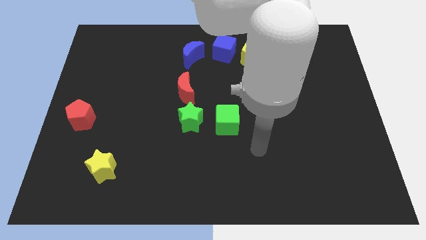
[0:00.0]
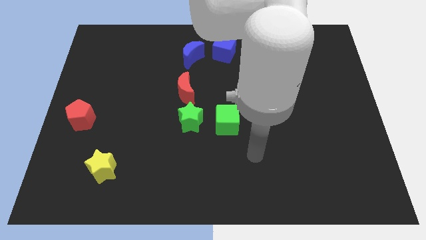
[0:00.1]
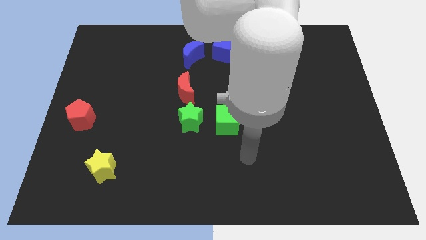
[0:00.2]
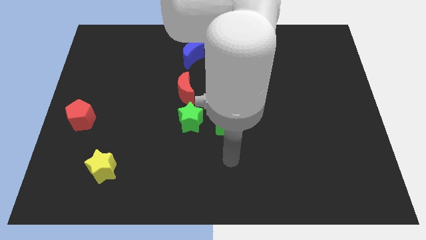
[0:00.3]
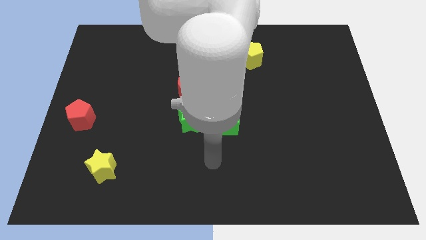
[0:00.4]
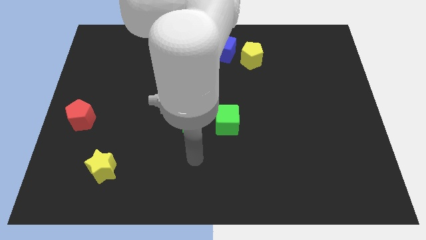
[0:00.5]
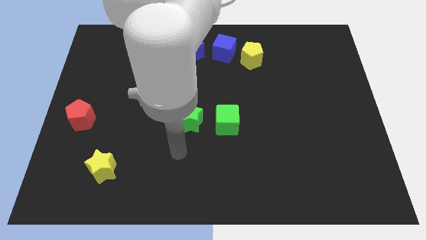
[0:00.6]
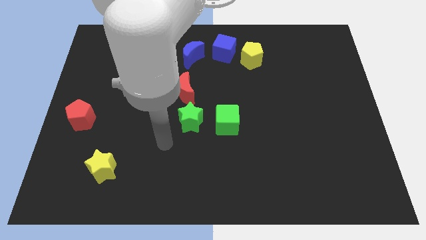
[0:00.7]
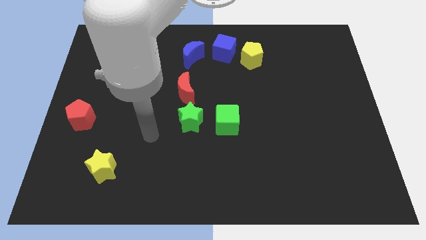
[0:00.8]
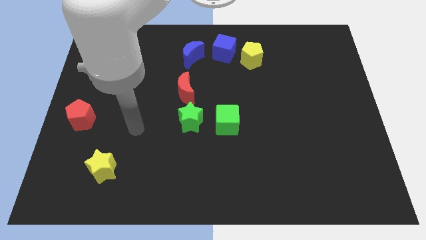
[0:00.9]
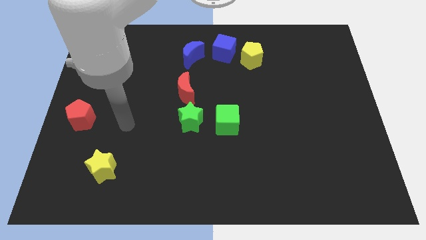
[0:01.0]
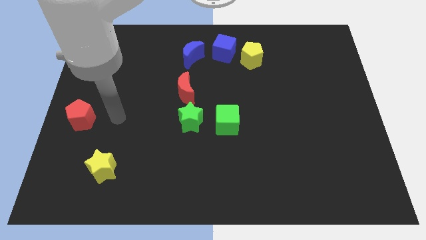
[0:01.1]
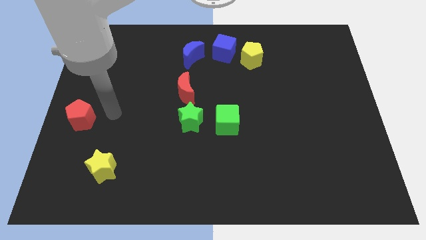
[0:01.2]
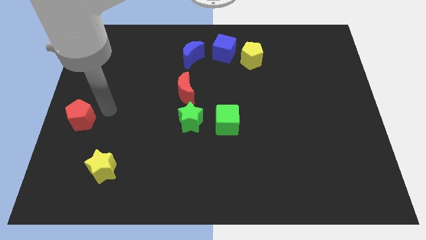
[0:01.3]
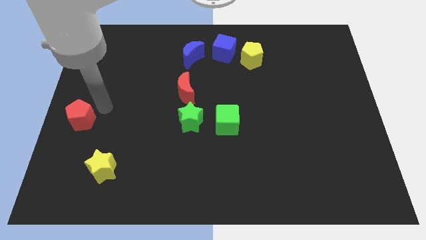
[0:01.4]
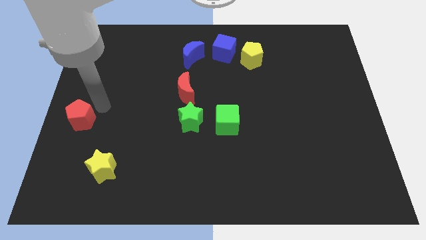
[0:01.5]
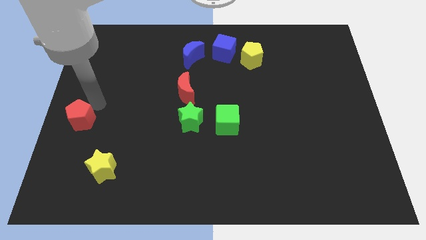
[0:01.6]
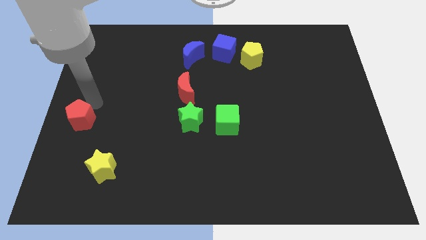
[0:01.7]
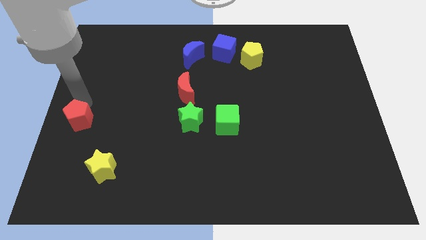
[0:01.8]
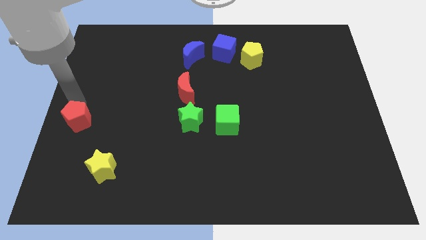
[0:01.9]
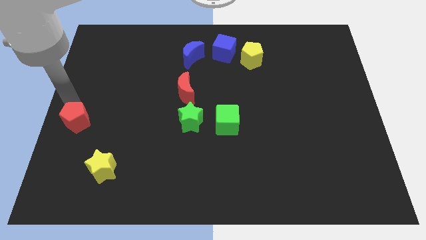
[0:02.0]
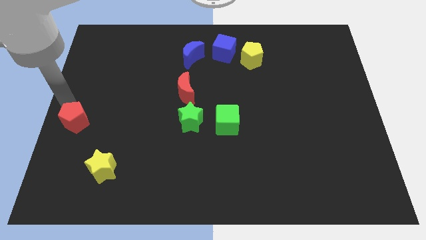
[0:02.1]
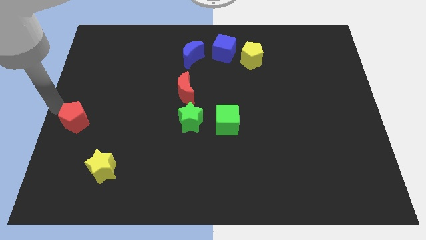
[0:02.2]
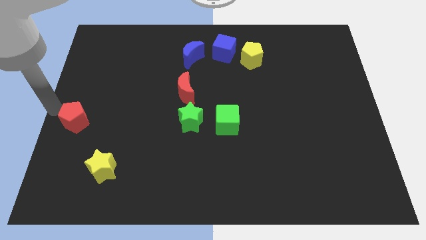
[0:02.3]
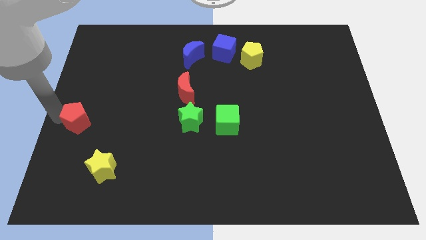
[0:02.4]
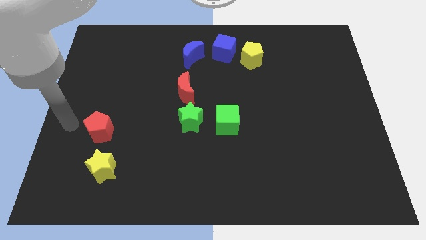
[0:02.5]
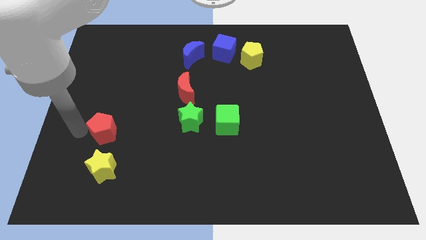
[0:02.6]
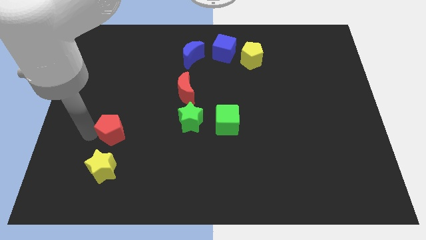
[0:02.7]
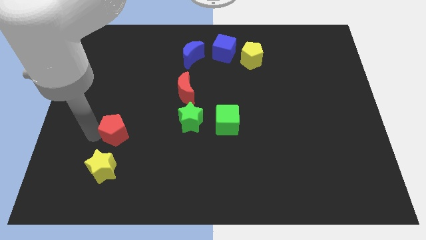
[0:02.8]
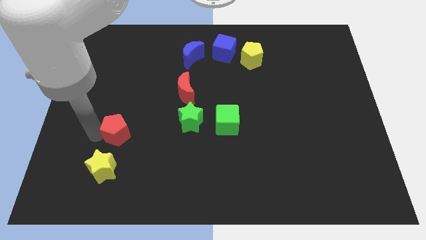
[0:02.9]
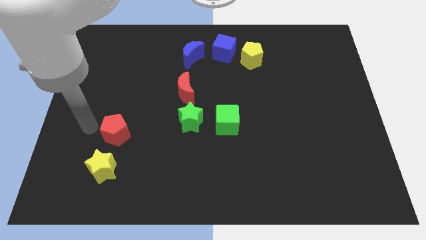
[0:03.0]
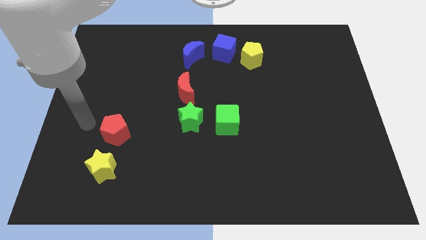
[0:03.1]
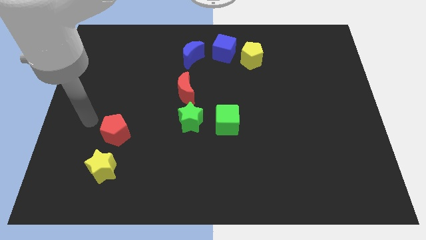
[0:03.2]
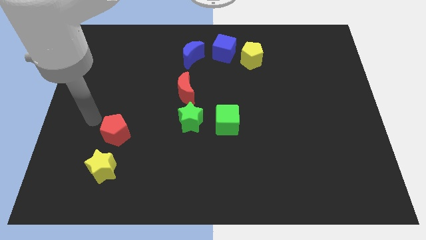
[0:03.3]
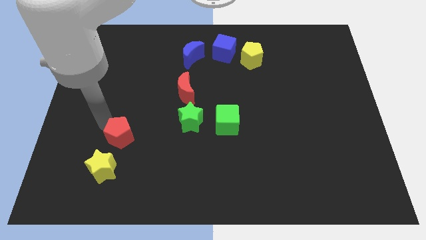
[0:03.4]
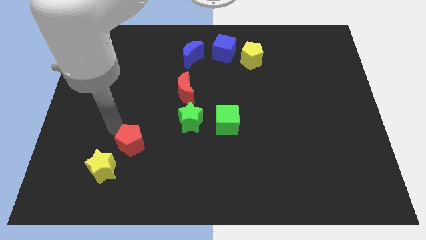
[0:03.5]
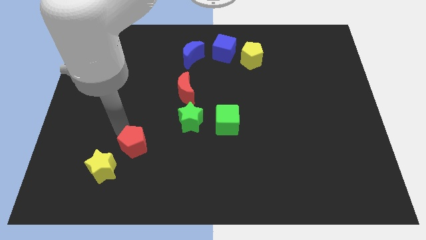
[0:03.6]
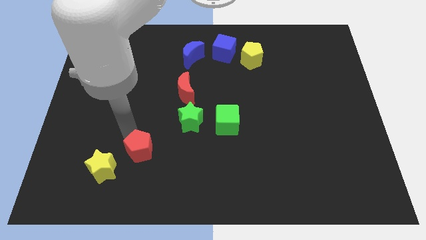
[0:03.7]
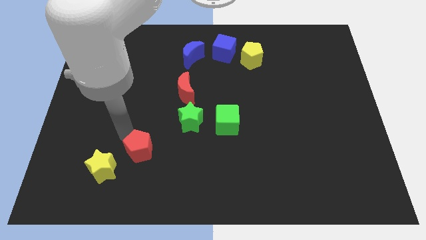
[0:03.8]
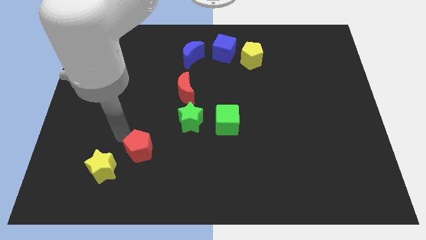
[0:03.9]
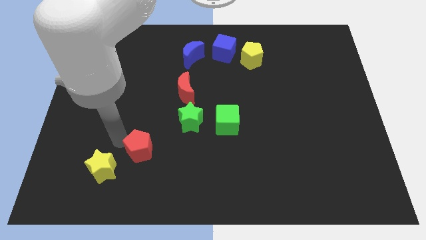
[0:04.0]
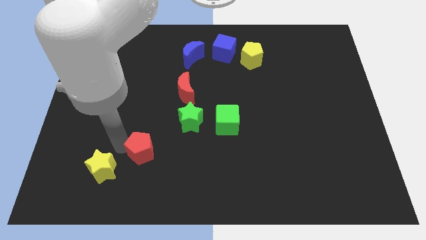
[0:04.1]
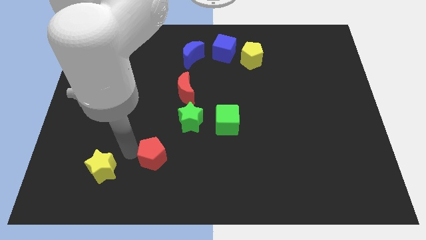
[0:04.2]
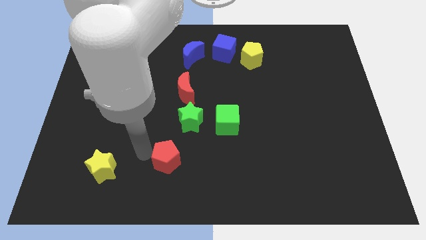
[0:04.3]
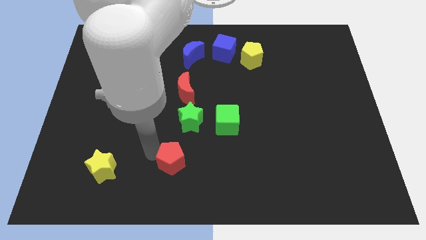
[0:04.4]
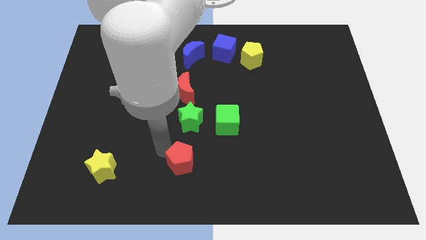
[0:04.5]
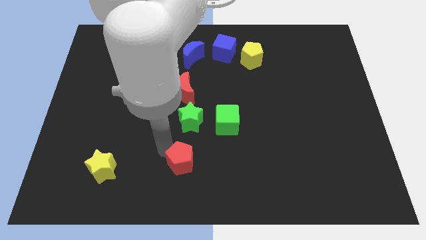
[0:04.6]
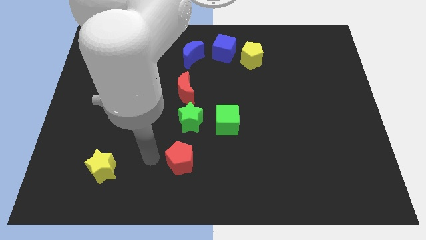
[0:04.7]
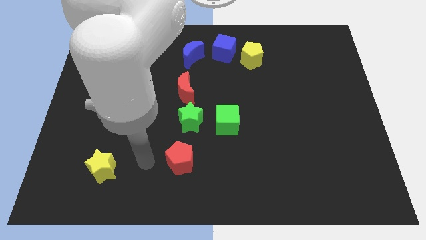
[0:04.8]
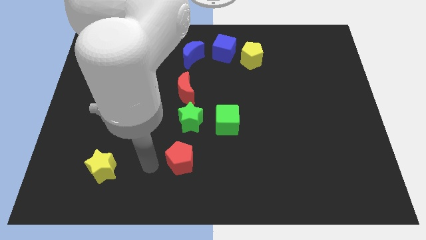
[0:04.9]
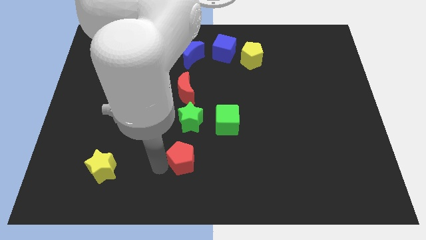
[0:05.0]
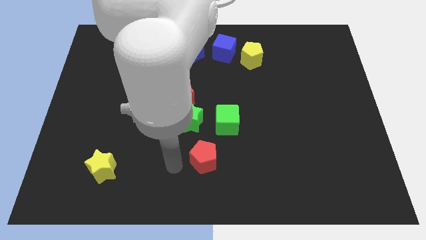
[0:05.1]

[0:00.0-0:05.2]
push the red pentagon below the green star

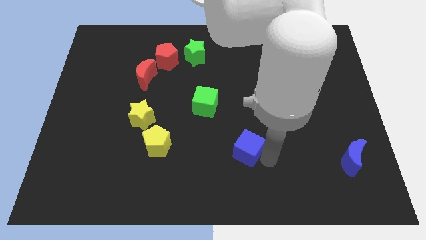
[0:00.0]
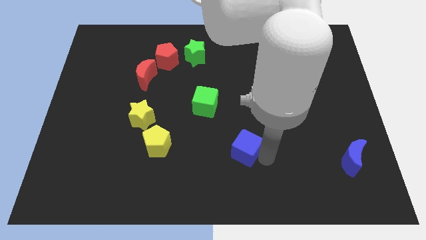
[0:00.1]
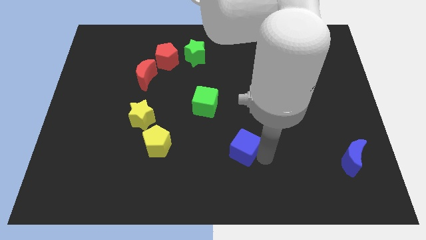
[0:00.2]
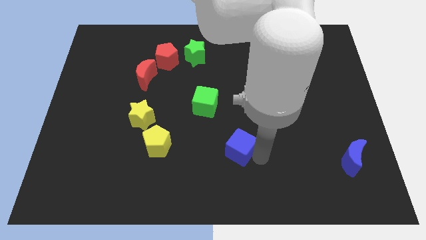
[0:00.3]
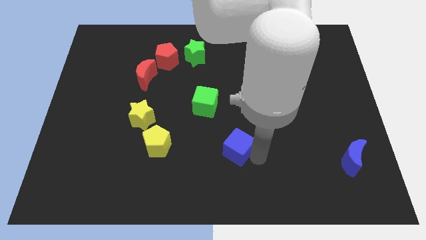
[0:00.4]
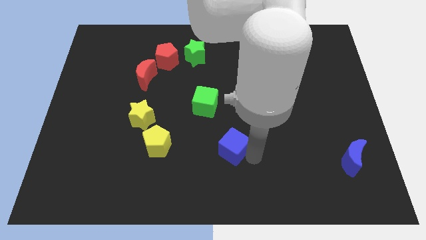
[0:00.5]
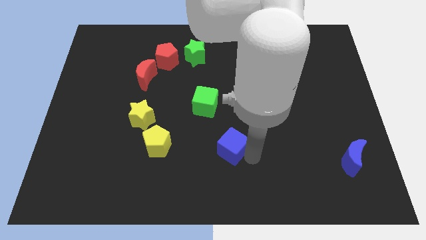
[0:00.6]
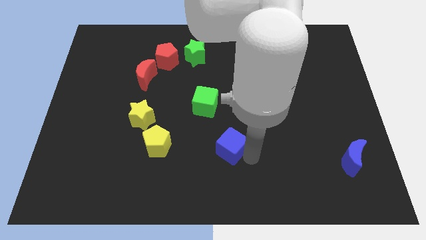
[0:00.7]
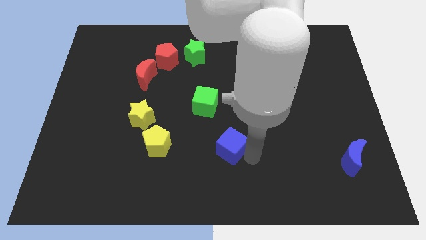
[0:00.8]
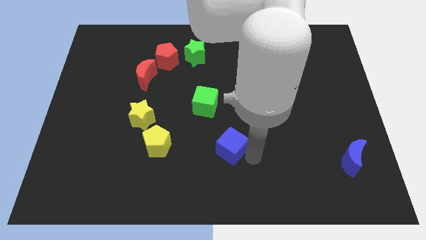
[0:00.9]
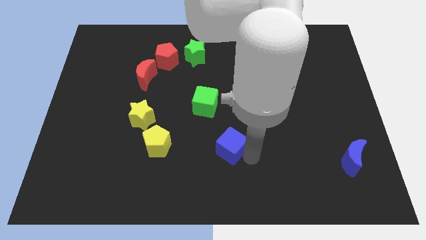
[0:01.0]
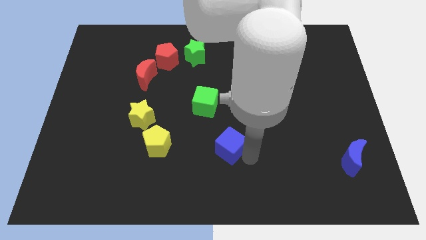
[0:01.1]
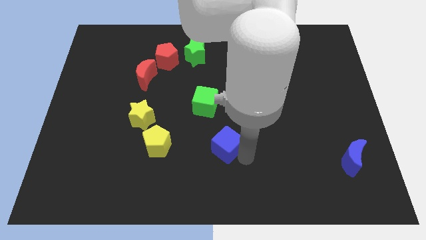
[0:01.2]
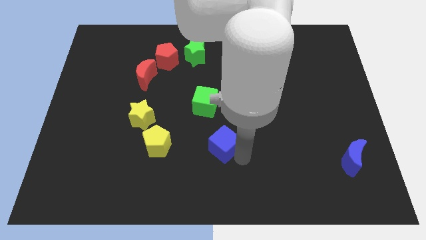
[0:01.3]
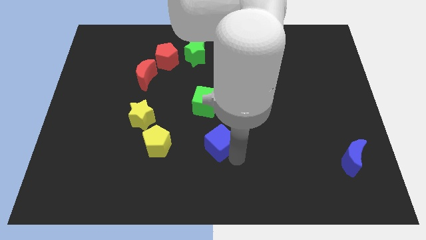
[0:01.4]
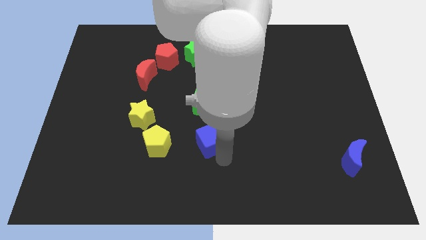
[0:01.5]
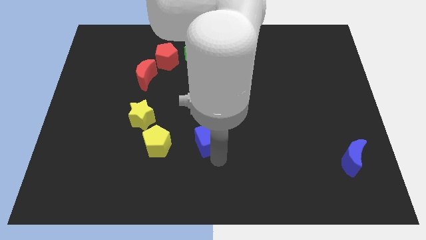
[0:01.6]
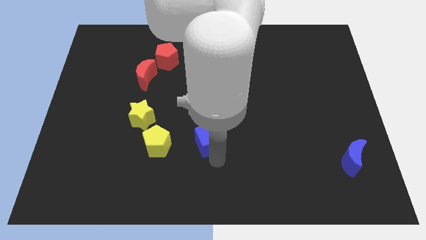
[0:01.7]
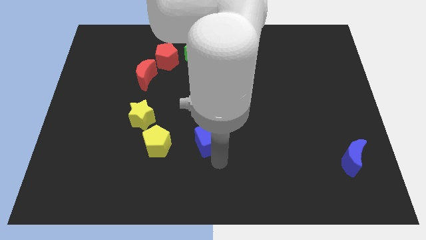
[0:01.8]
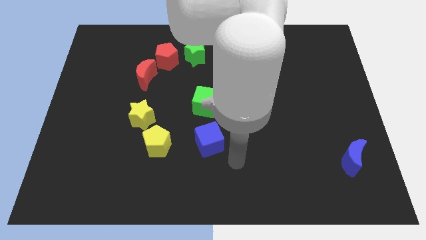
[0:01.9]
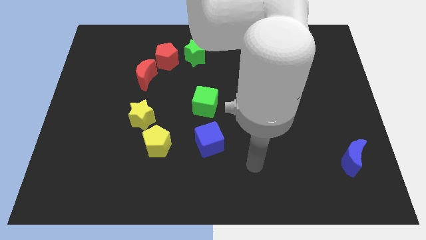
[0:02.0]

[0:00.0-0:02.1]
place the blue cube below the green cube

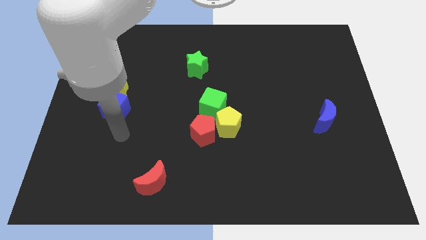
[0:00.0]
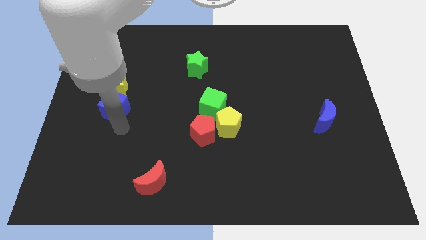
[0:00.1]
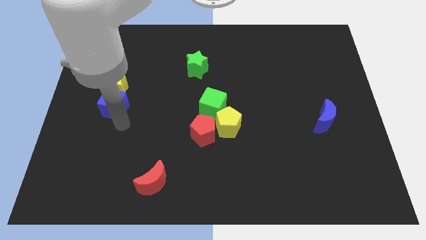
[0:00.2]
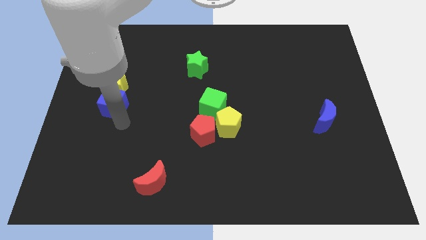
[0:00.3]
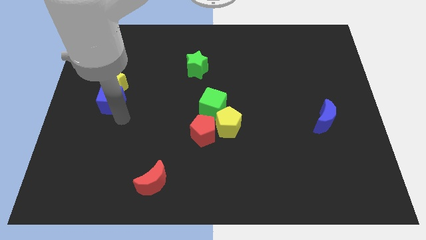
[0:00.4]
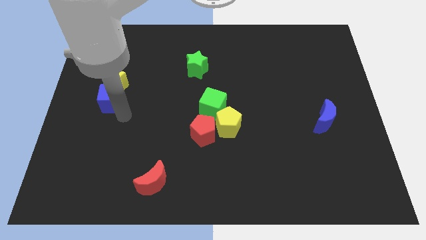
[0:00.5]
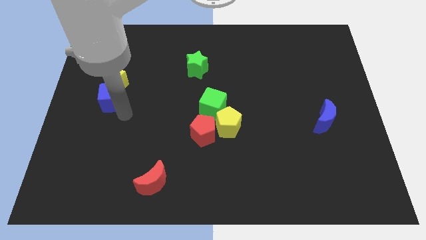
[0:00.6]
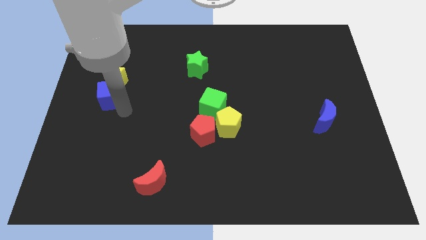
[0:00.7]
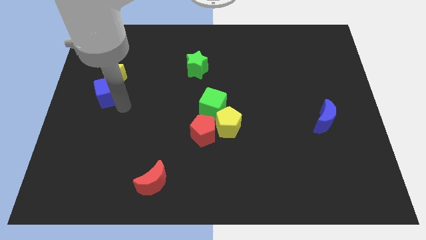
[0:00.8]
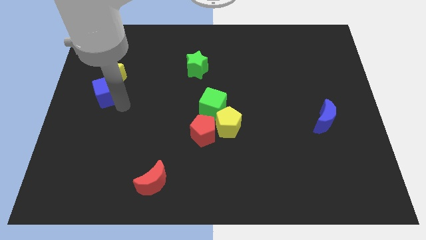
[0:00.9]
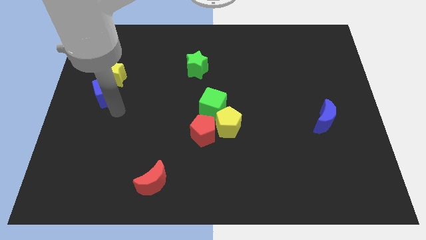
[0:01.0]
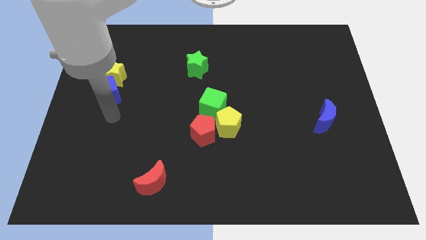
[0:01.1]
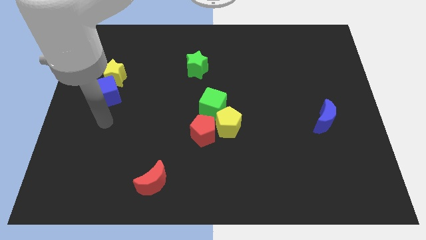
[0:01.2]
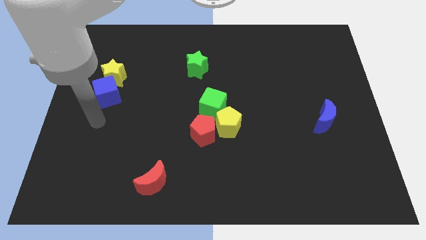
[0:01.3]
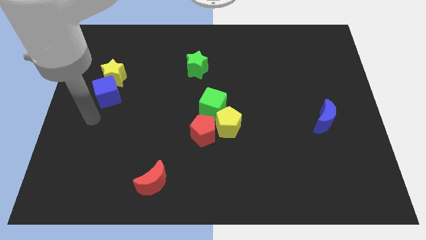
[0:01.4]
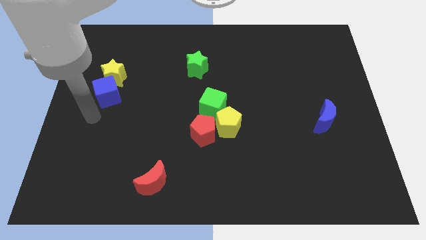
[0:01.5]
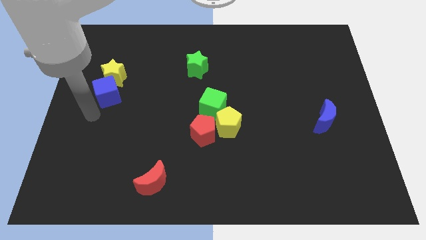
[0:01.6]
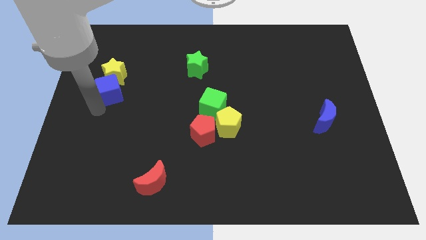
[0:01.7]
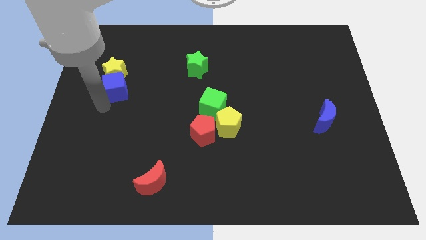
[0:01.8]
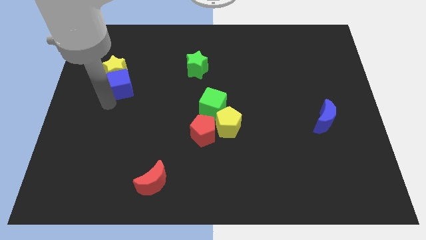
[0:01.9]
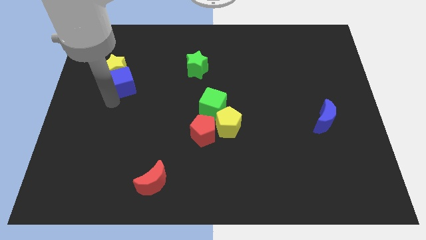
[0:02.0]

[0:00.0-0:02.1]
push blue moon along with yellow star upwards
